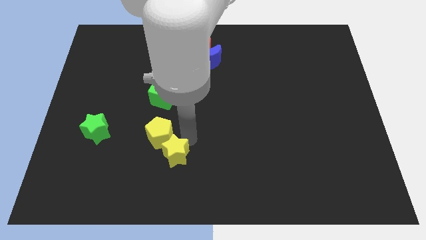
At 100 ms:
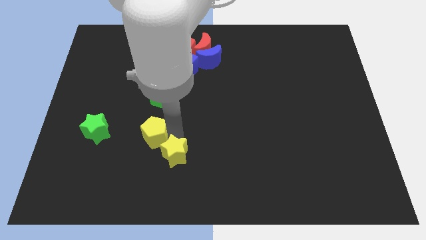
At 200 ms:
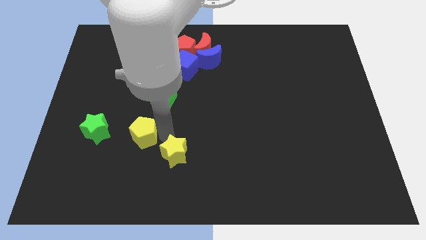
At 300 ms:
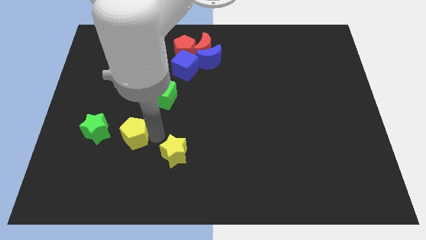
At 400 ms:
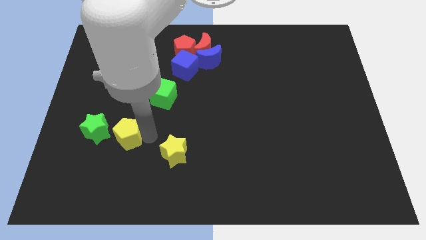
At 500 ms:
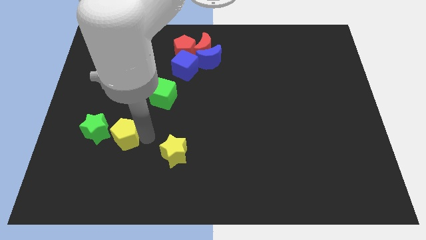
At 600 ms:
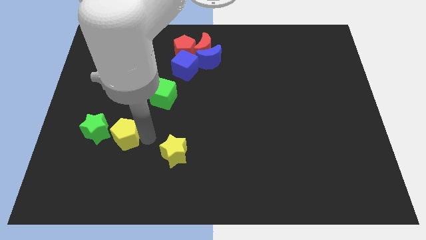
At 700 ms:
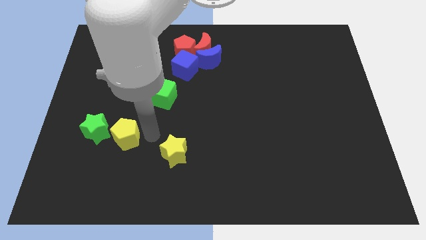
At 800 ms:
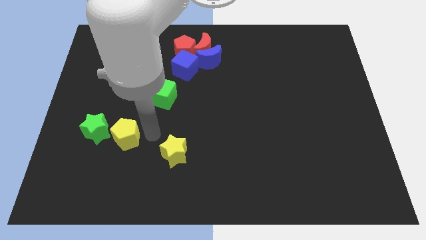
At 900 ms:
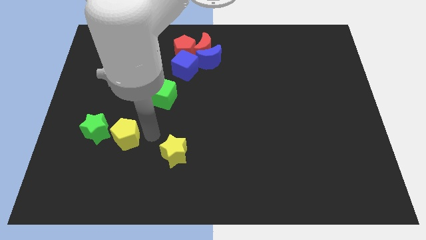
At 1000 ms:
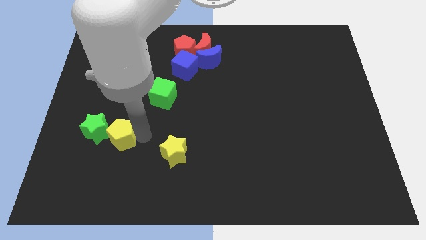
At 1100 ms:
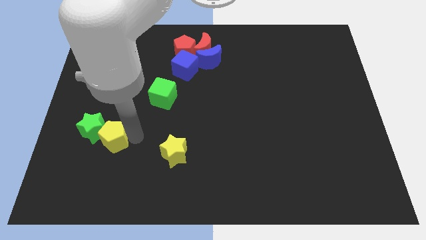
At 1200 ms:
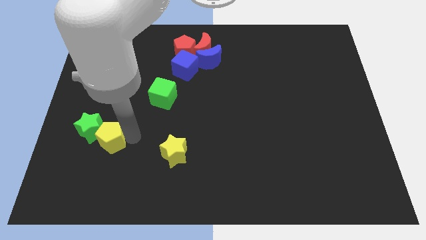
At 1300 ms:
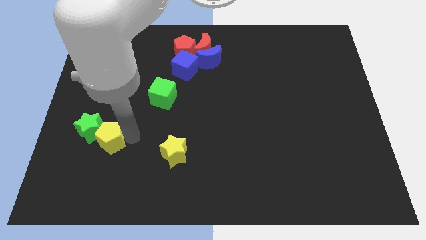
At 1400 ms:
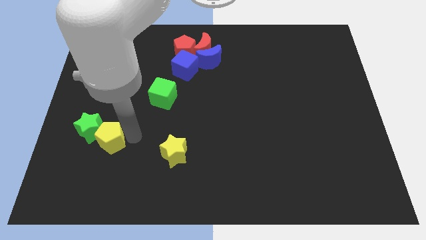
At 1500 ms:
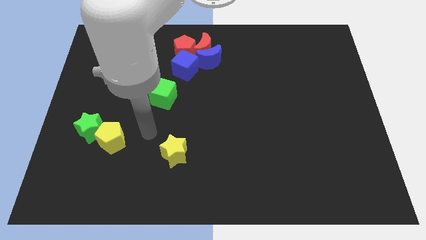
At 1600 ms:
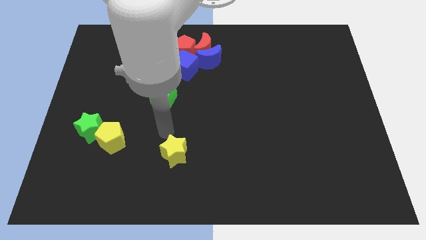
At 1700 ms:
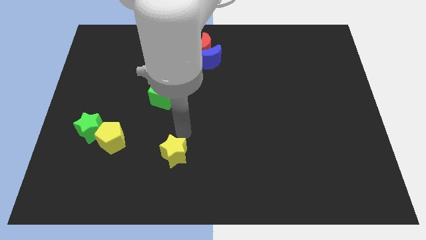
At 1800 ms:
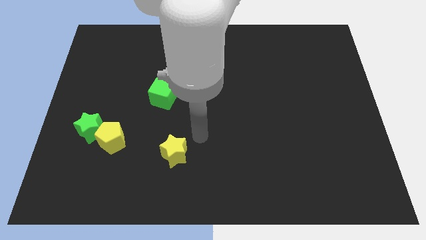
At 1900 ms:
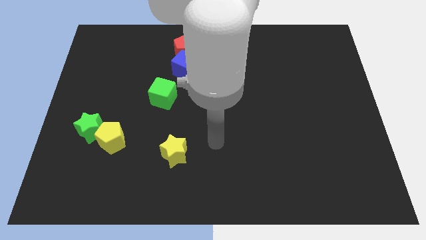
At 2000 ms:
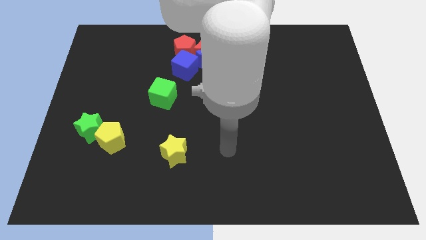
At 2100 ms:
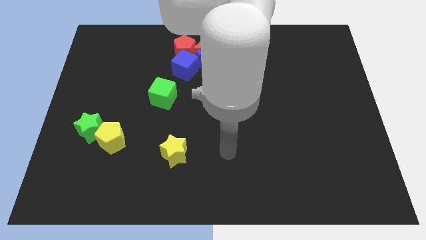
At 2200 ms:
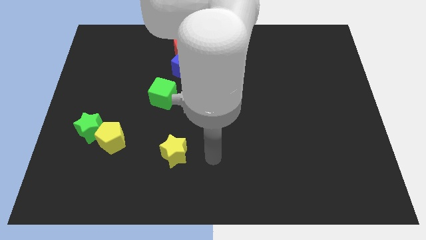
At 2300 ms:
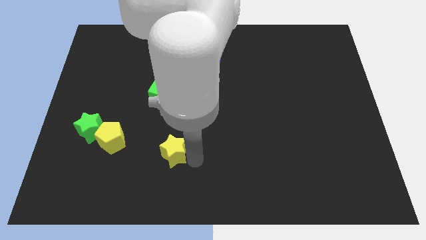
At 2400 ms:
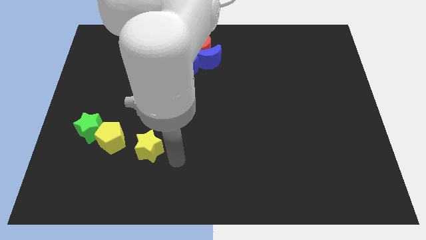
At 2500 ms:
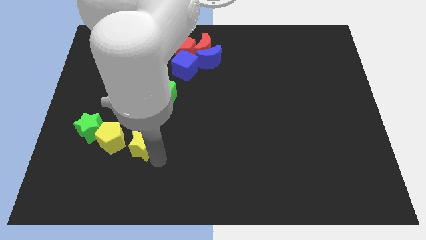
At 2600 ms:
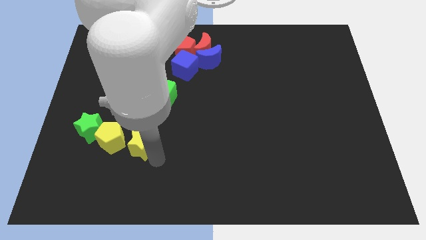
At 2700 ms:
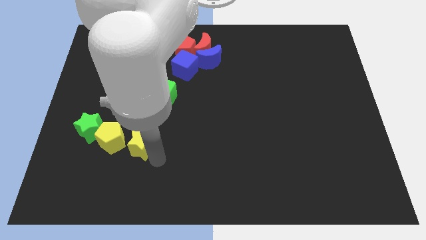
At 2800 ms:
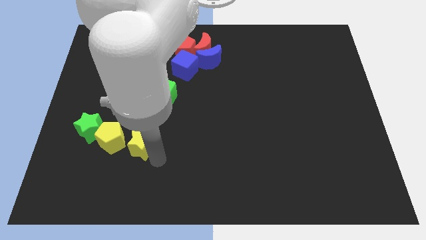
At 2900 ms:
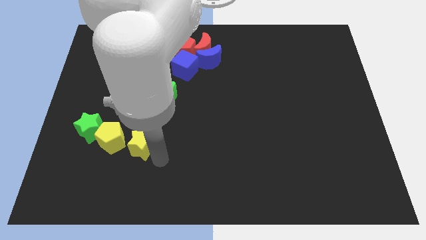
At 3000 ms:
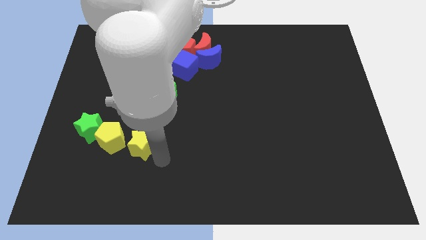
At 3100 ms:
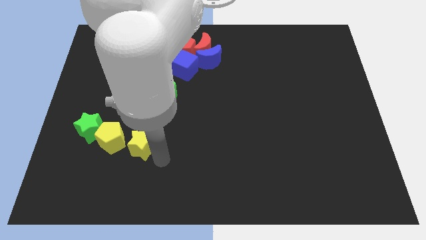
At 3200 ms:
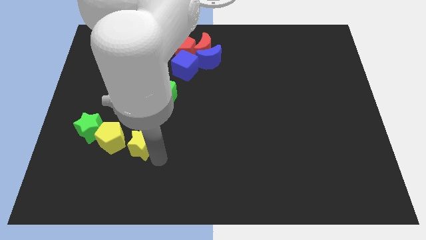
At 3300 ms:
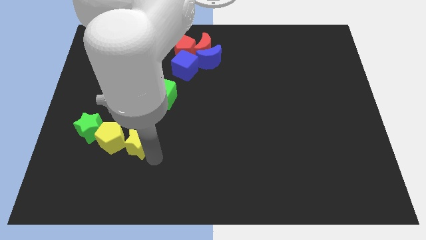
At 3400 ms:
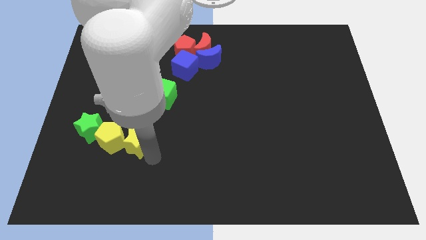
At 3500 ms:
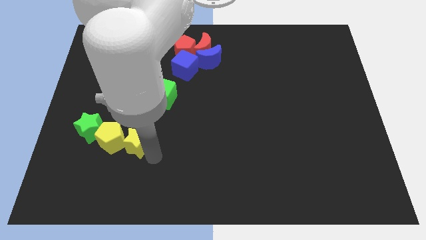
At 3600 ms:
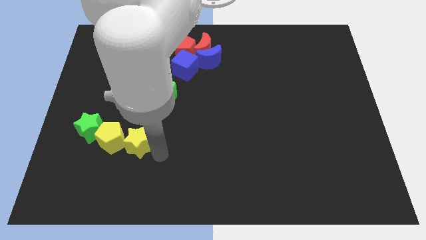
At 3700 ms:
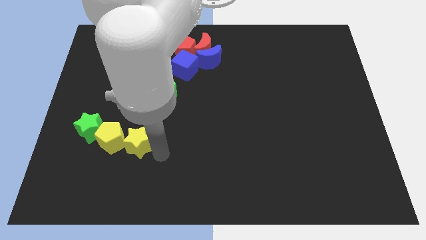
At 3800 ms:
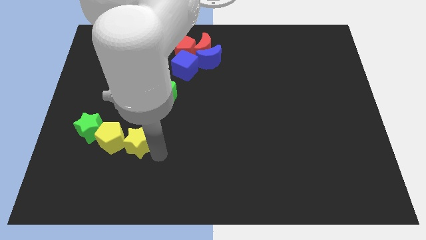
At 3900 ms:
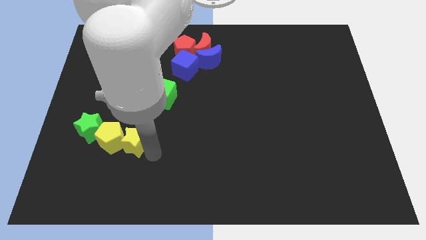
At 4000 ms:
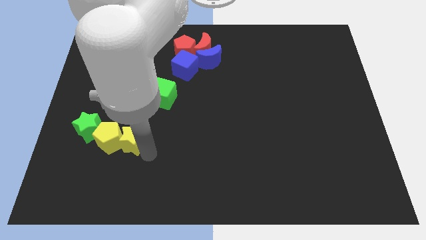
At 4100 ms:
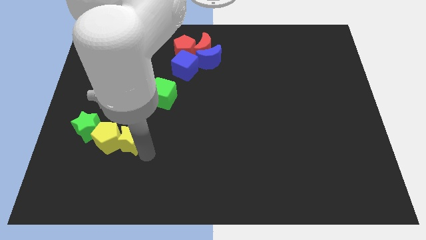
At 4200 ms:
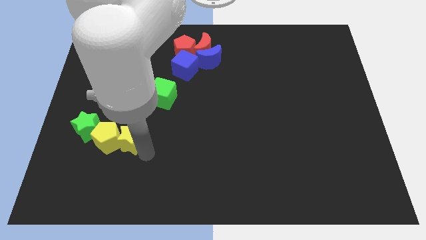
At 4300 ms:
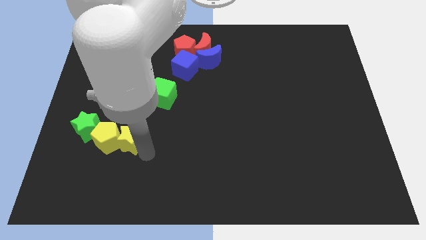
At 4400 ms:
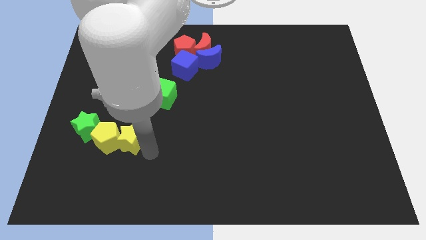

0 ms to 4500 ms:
take the yellow blocks into the green star

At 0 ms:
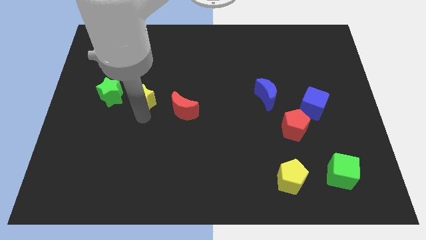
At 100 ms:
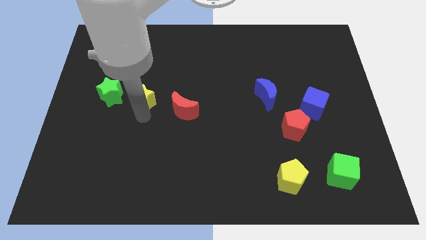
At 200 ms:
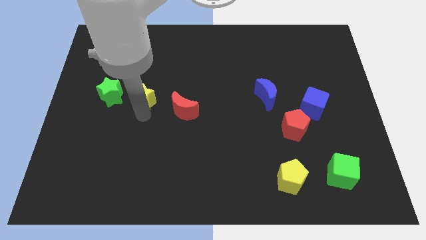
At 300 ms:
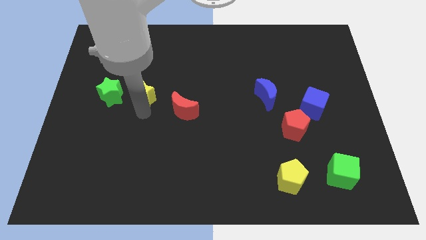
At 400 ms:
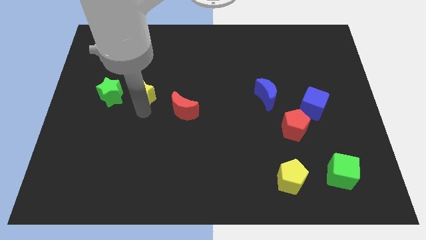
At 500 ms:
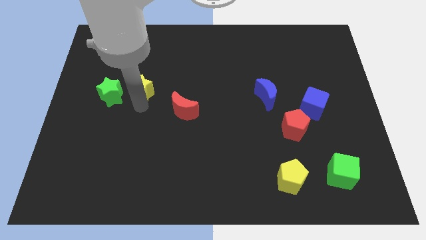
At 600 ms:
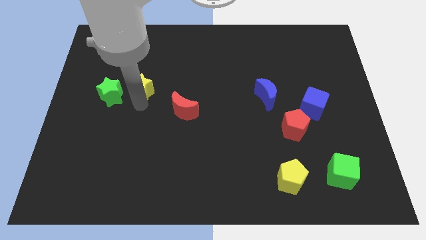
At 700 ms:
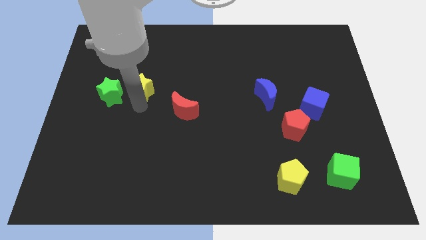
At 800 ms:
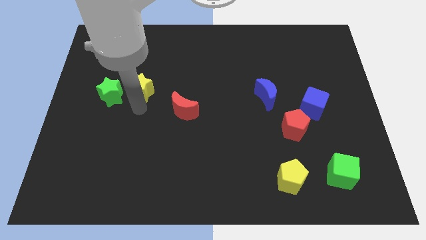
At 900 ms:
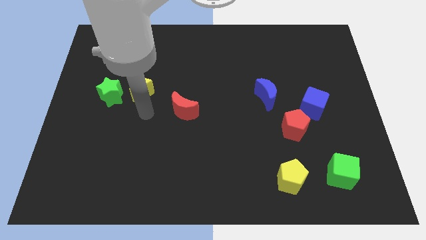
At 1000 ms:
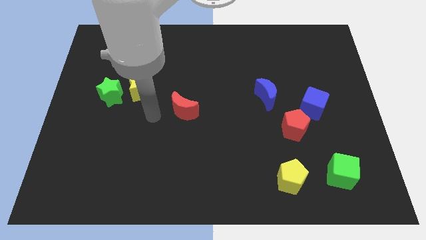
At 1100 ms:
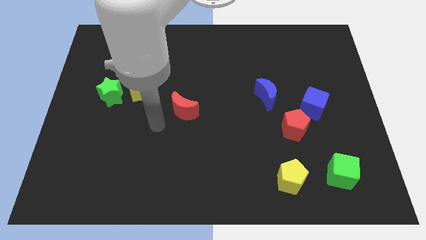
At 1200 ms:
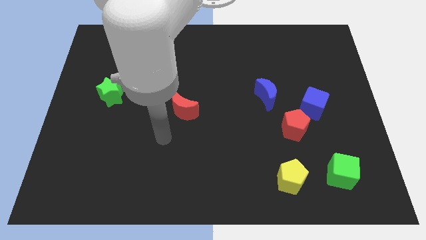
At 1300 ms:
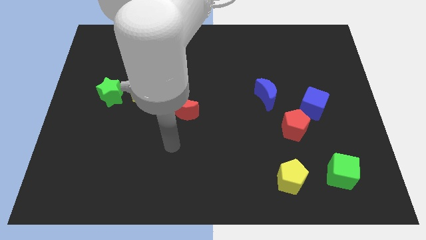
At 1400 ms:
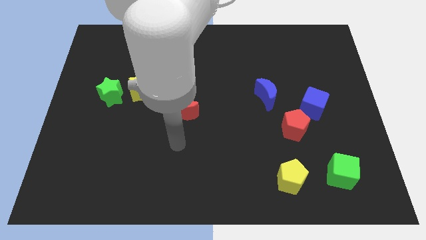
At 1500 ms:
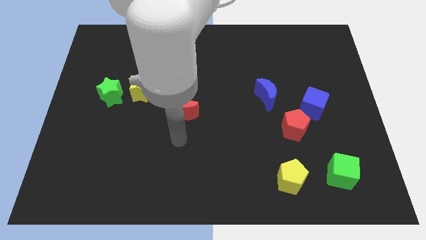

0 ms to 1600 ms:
push the yellow star right to the green star

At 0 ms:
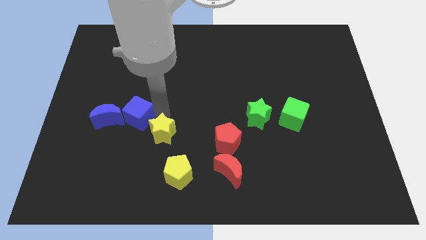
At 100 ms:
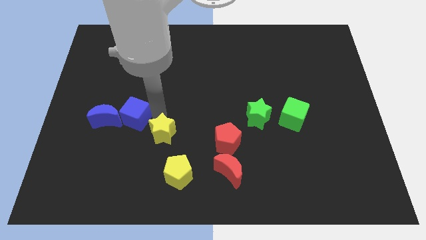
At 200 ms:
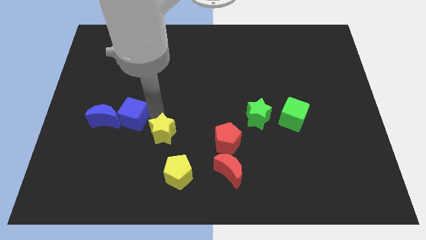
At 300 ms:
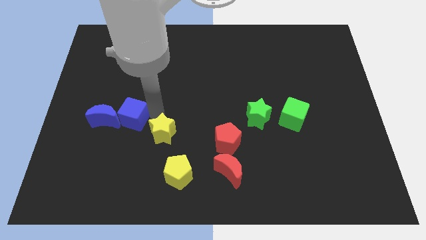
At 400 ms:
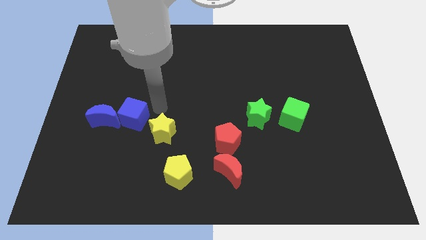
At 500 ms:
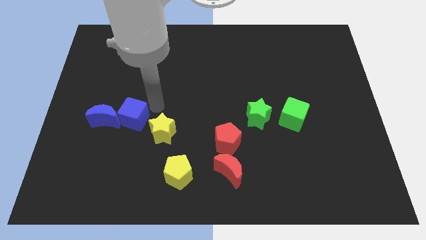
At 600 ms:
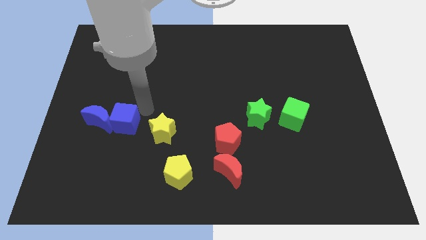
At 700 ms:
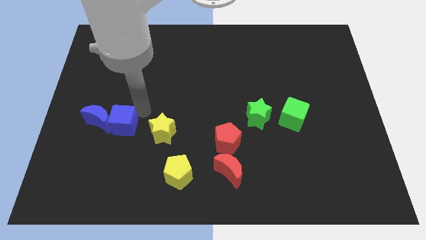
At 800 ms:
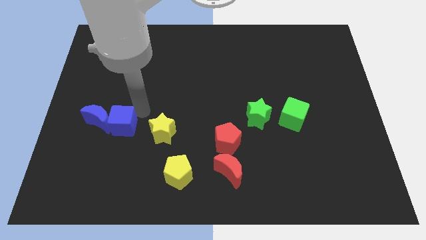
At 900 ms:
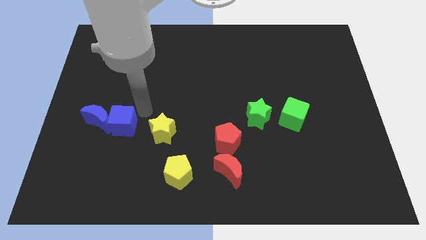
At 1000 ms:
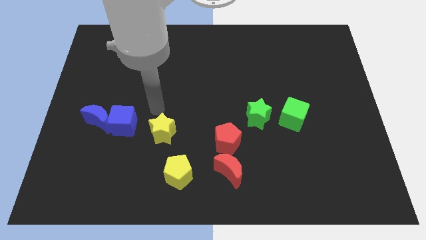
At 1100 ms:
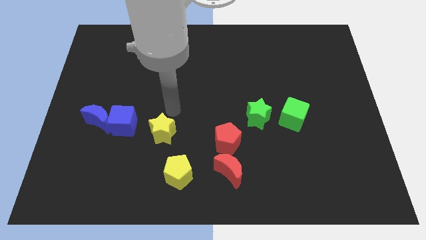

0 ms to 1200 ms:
move the blue cube near to the blue crescent

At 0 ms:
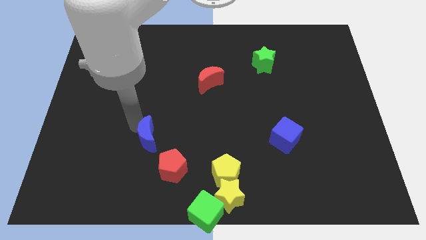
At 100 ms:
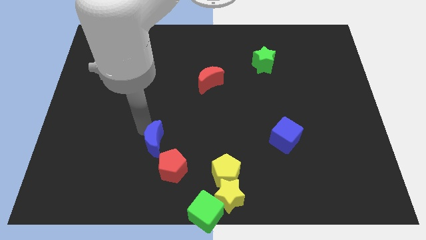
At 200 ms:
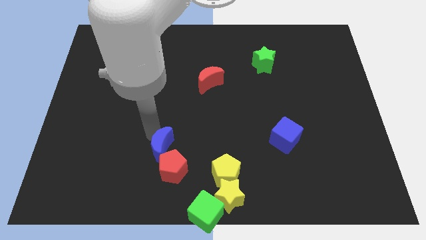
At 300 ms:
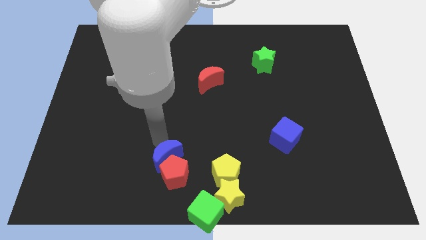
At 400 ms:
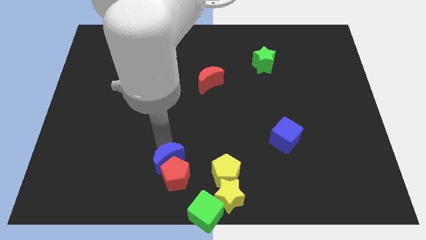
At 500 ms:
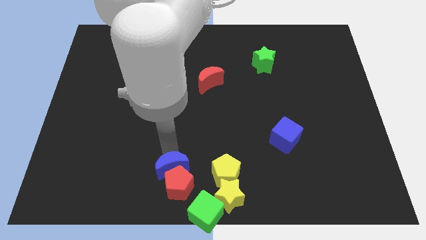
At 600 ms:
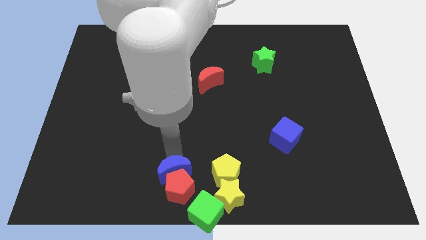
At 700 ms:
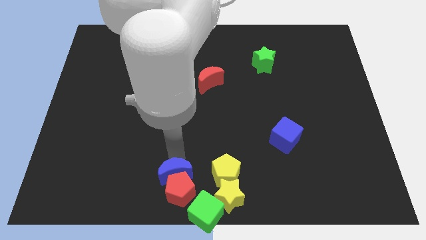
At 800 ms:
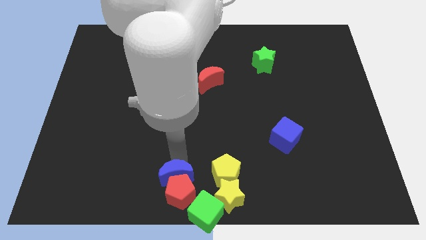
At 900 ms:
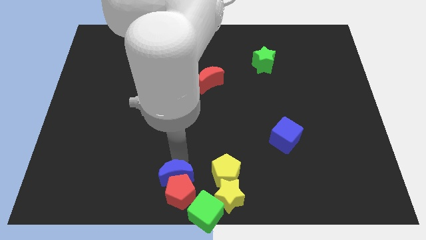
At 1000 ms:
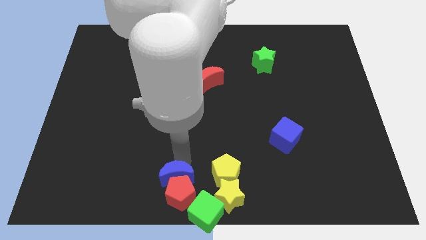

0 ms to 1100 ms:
move the blue crescent into the red pentagon to the group of blocks

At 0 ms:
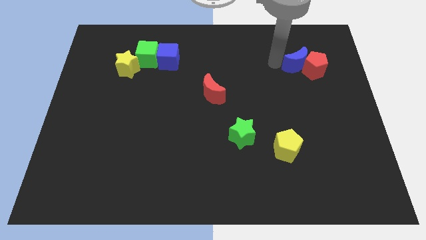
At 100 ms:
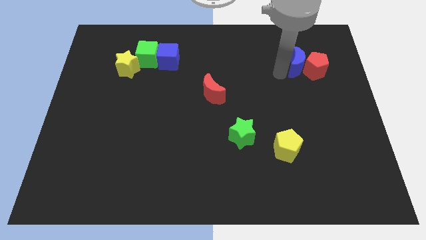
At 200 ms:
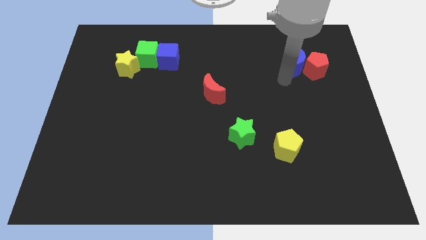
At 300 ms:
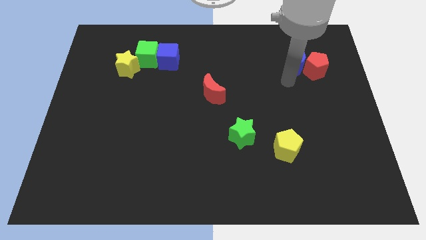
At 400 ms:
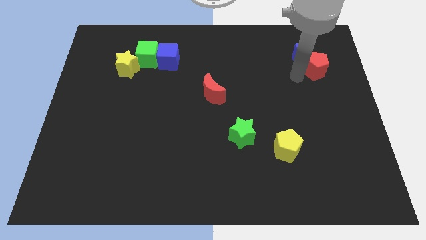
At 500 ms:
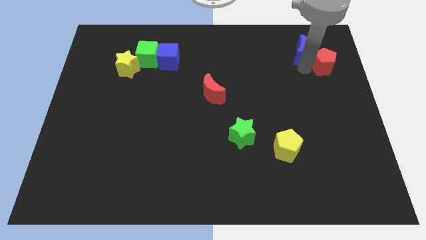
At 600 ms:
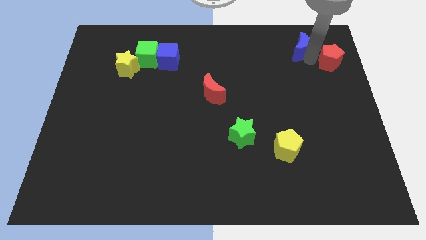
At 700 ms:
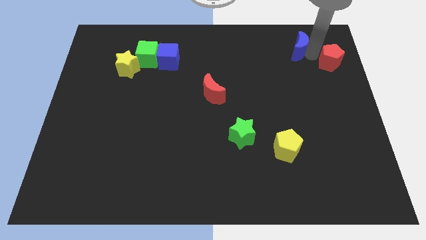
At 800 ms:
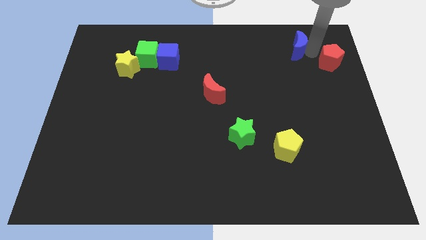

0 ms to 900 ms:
move the blue crescent slightly upwards to the top right of the board
